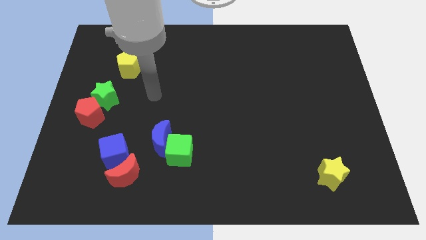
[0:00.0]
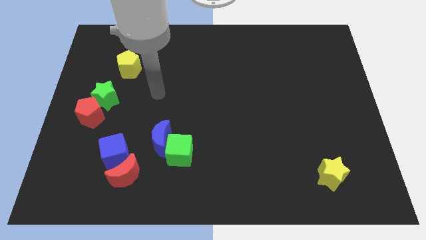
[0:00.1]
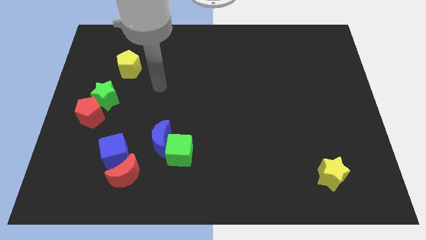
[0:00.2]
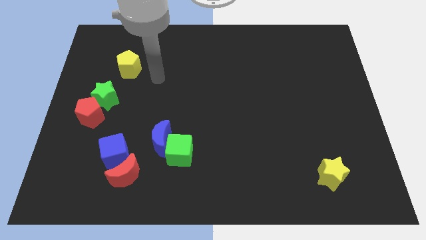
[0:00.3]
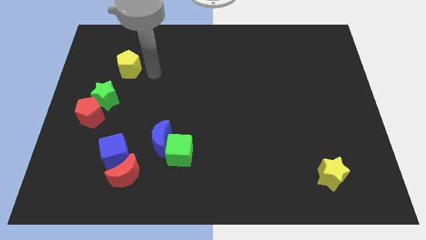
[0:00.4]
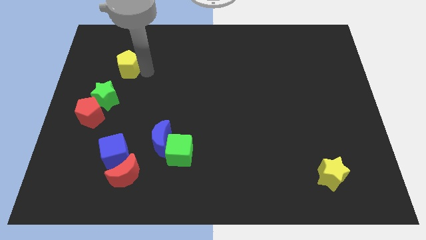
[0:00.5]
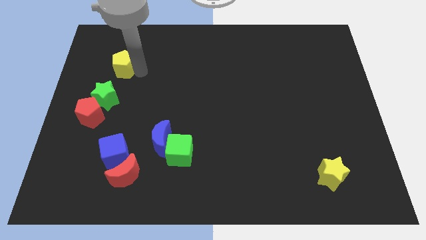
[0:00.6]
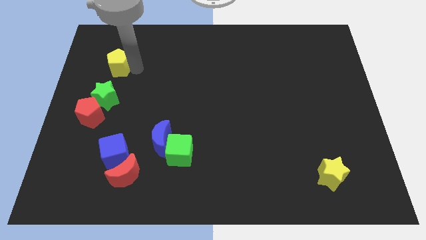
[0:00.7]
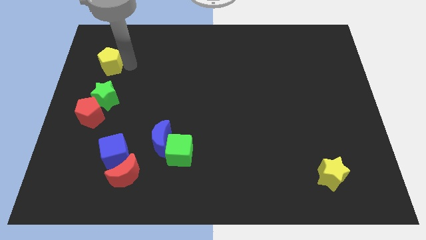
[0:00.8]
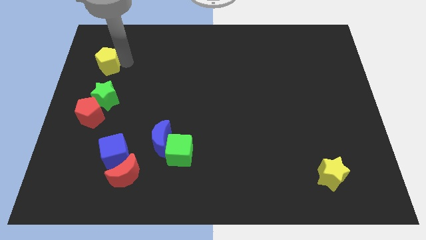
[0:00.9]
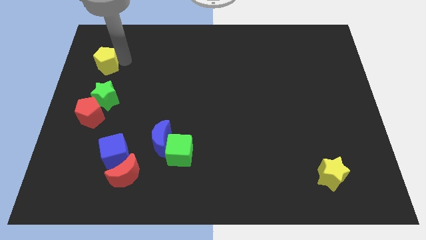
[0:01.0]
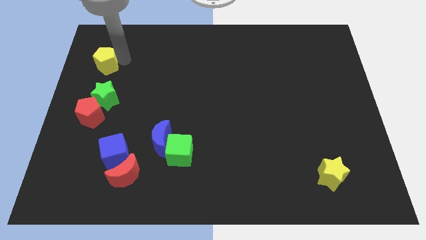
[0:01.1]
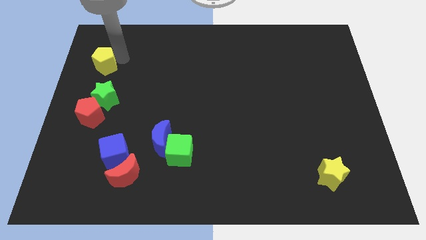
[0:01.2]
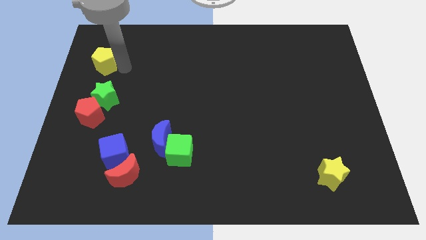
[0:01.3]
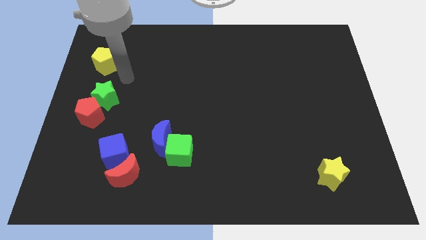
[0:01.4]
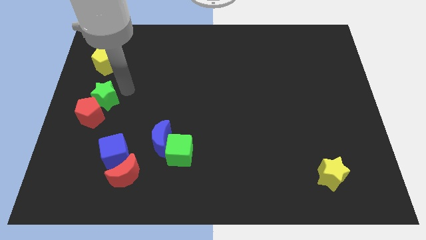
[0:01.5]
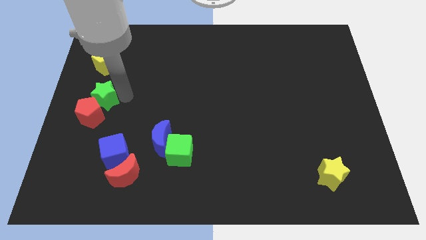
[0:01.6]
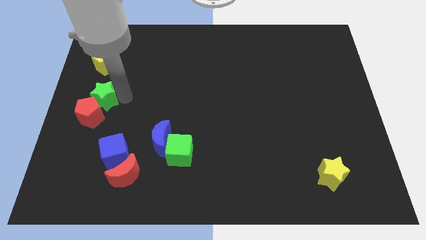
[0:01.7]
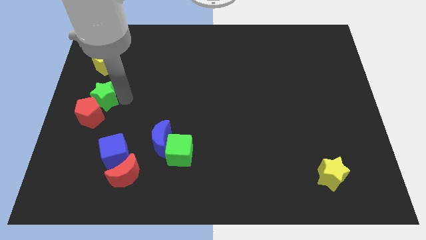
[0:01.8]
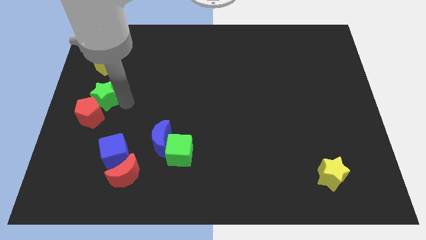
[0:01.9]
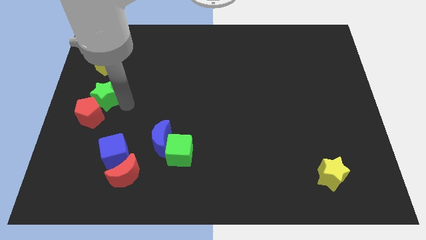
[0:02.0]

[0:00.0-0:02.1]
move the yellow pentagon above the green star

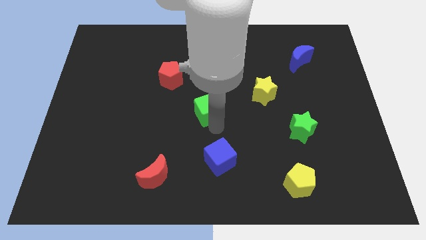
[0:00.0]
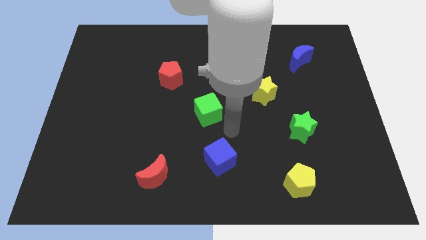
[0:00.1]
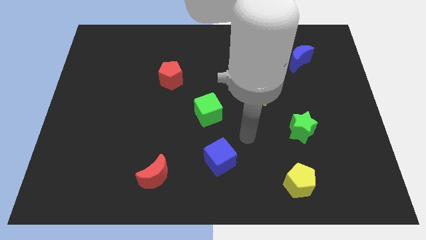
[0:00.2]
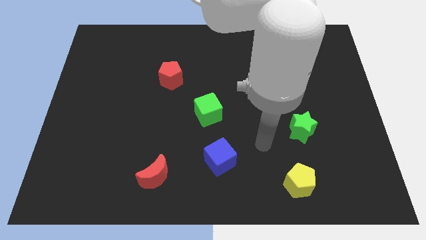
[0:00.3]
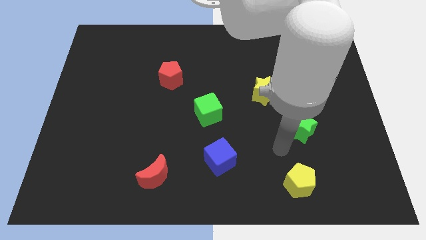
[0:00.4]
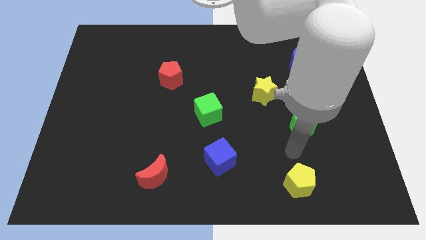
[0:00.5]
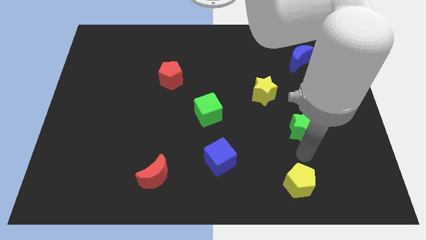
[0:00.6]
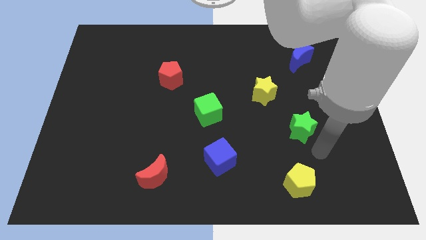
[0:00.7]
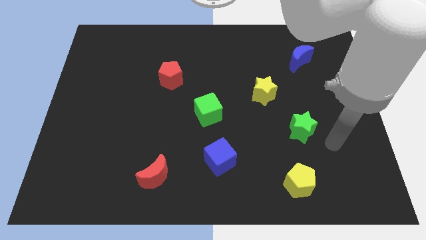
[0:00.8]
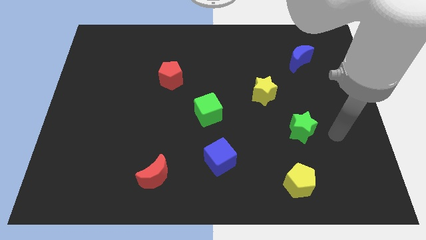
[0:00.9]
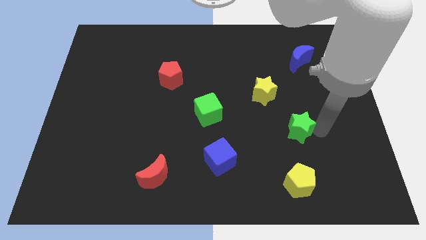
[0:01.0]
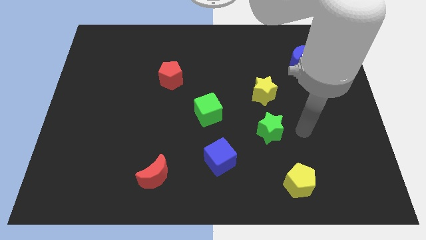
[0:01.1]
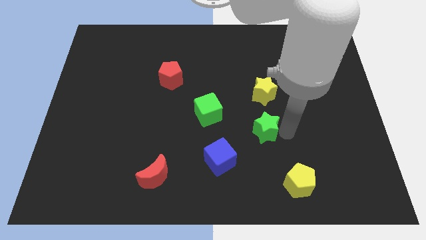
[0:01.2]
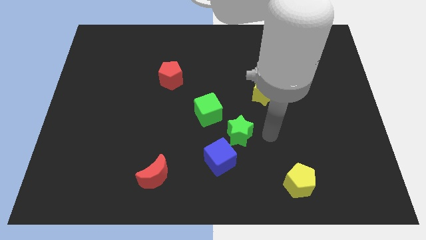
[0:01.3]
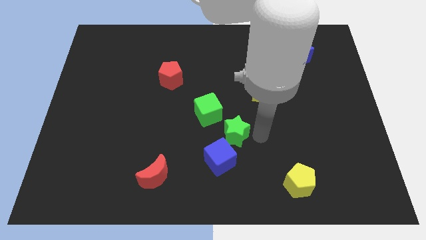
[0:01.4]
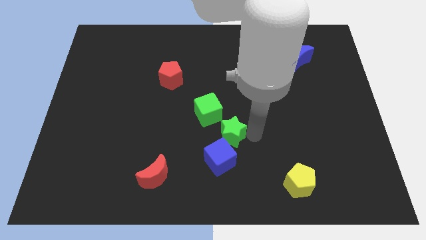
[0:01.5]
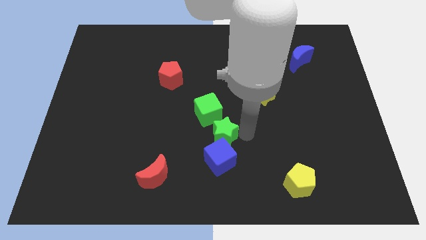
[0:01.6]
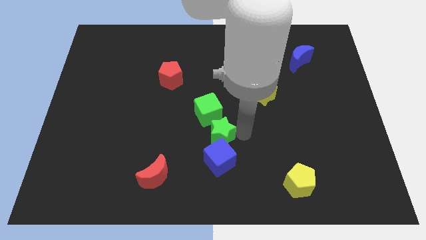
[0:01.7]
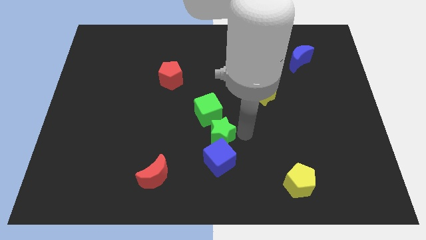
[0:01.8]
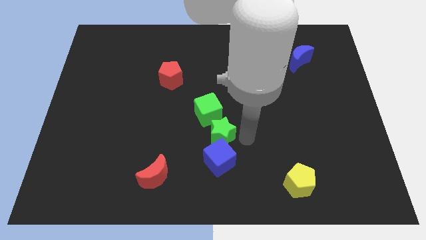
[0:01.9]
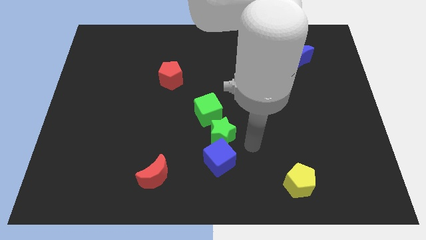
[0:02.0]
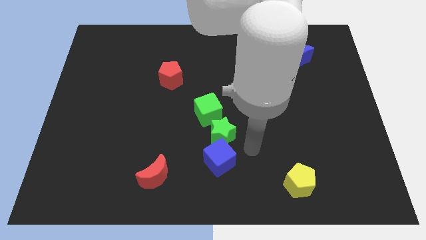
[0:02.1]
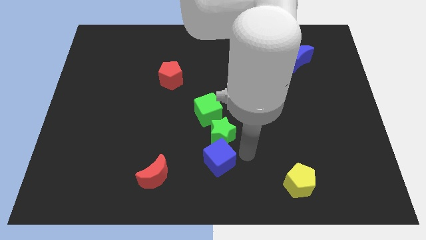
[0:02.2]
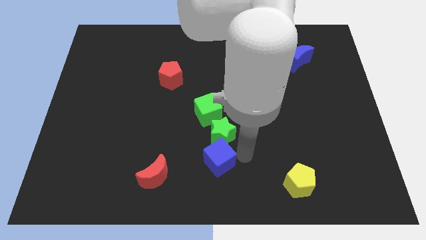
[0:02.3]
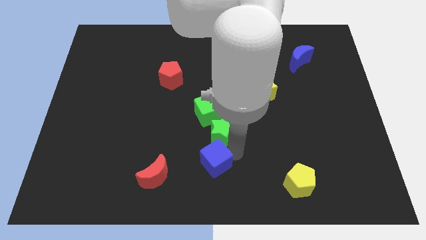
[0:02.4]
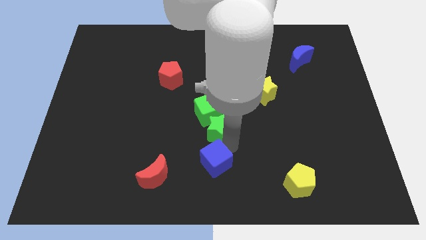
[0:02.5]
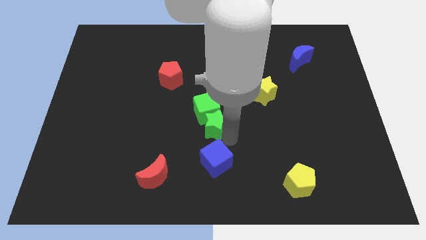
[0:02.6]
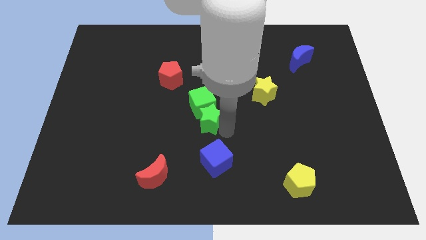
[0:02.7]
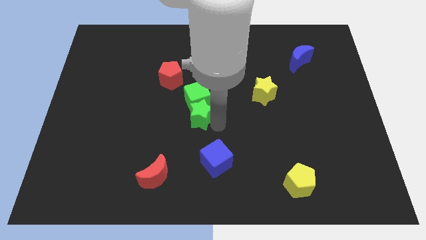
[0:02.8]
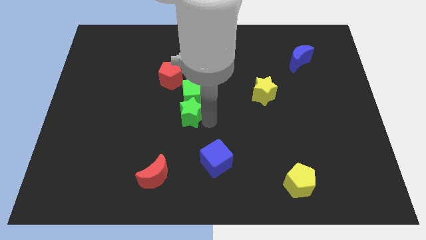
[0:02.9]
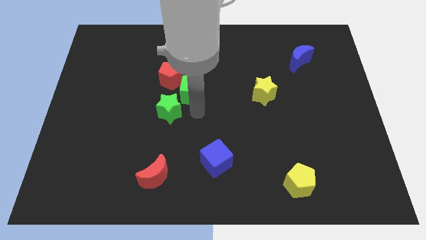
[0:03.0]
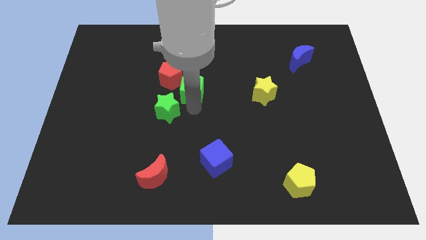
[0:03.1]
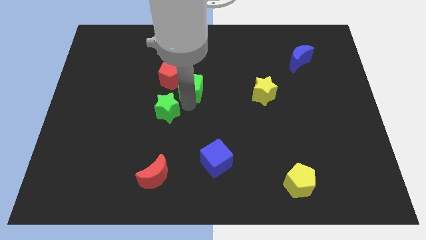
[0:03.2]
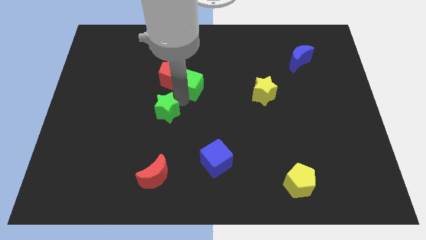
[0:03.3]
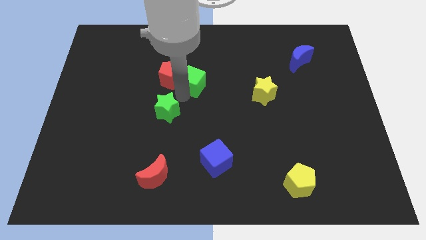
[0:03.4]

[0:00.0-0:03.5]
push the green star to the left side of the board

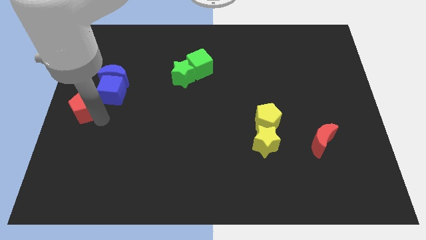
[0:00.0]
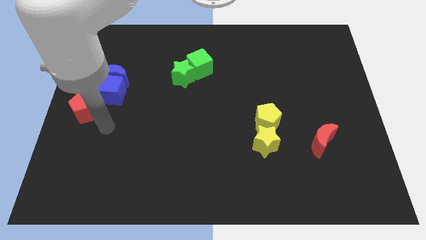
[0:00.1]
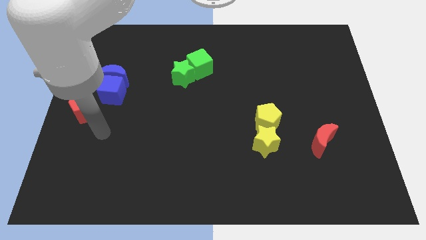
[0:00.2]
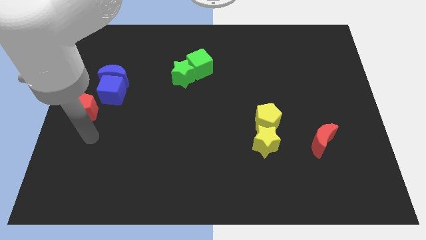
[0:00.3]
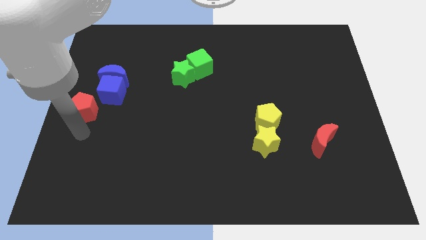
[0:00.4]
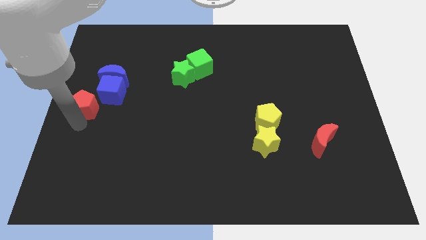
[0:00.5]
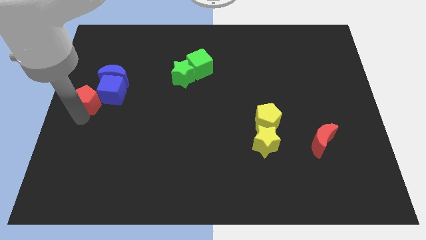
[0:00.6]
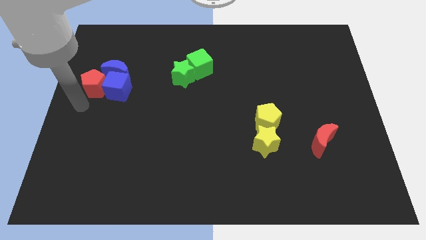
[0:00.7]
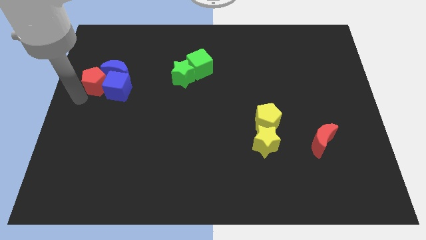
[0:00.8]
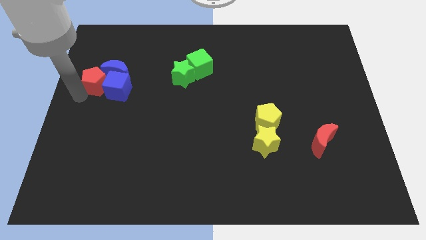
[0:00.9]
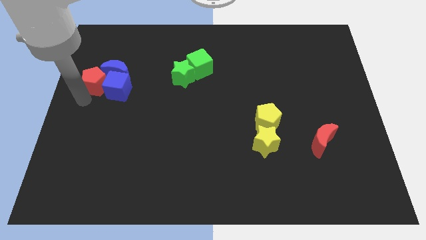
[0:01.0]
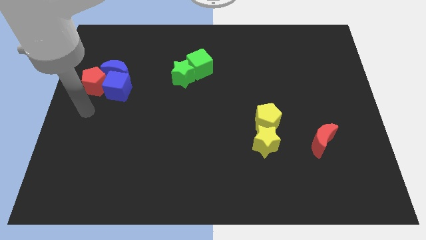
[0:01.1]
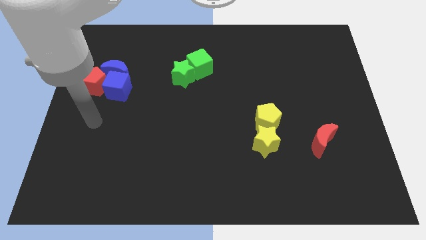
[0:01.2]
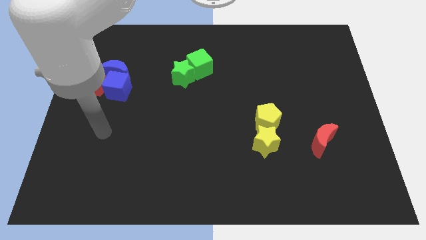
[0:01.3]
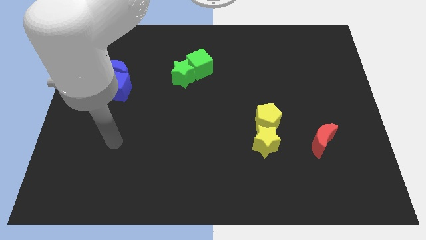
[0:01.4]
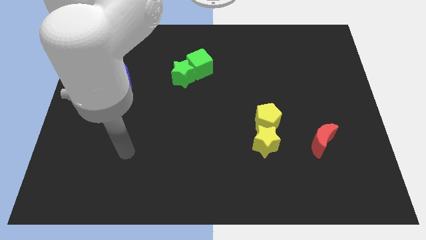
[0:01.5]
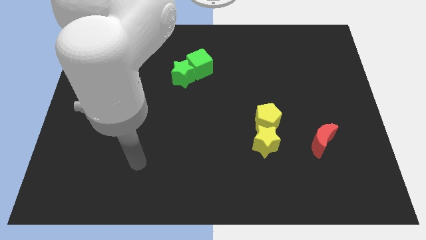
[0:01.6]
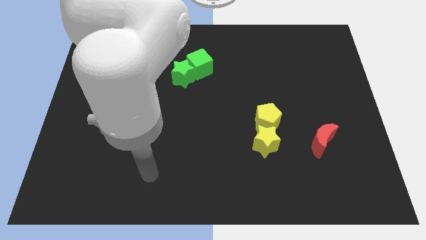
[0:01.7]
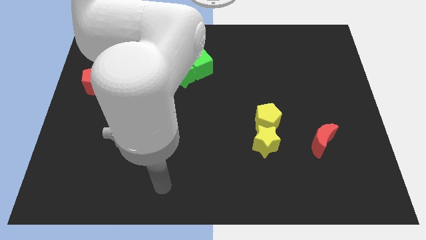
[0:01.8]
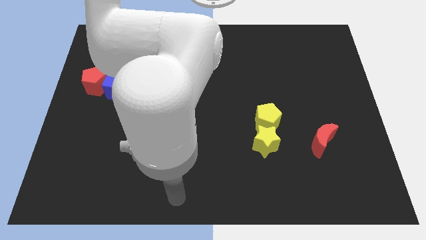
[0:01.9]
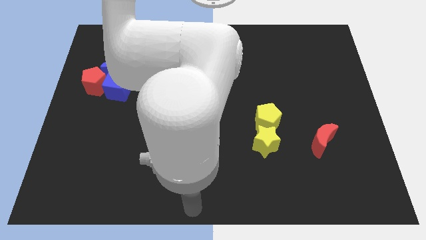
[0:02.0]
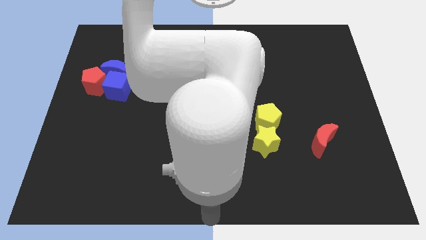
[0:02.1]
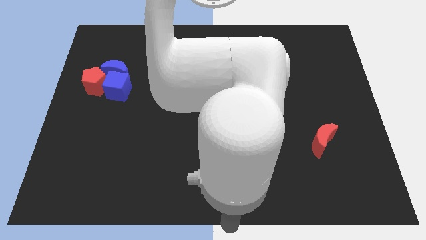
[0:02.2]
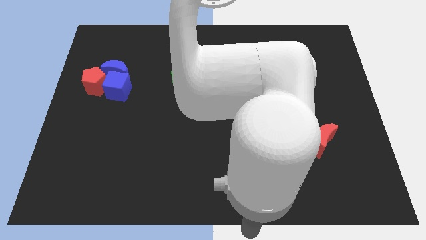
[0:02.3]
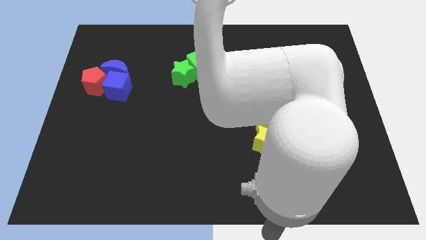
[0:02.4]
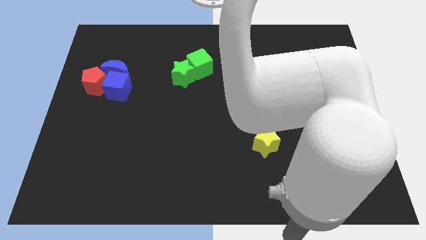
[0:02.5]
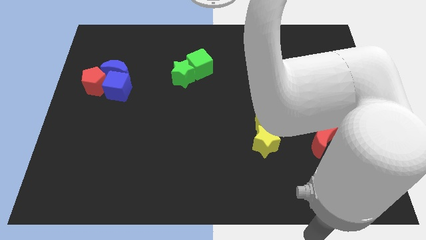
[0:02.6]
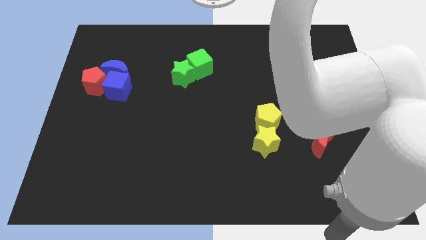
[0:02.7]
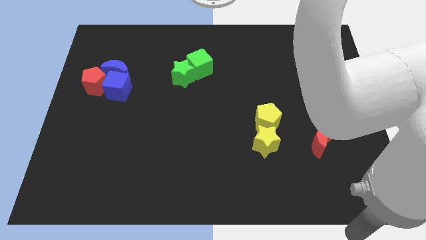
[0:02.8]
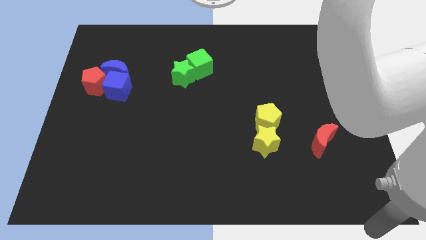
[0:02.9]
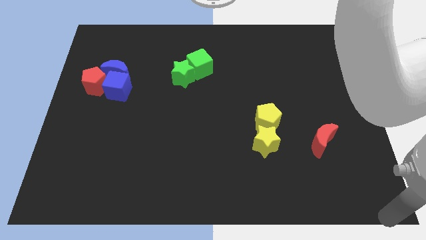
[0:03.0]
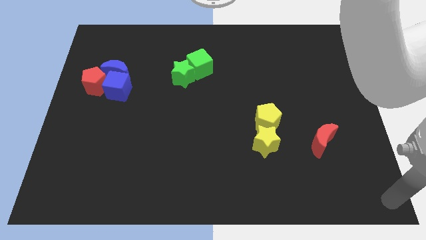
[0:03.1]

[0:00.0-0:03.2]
move the red pentagon left the blue cube

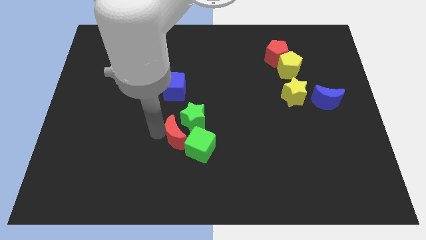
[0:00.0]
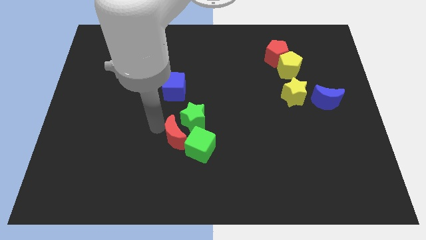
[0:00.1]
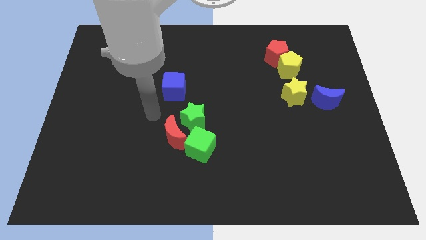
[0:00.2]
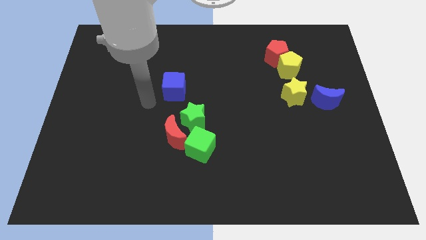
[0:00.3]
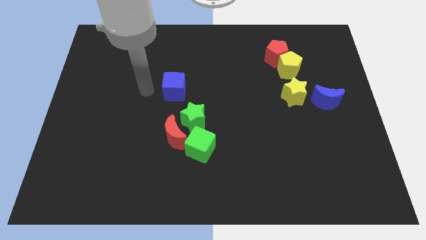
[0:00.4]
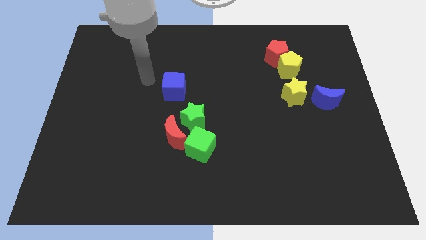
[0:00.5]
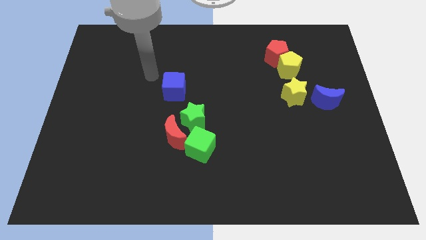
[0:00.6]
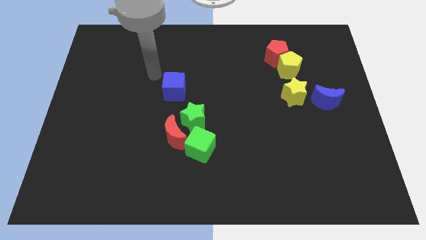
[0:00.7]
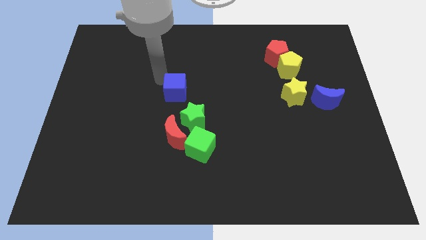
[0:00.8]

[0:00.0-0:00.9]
point your arm at the top left side of blue cube
